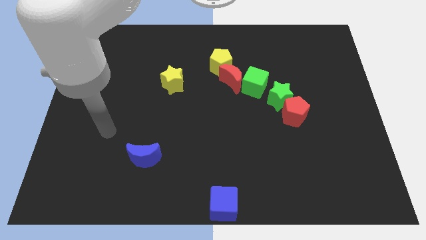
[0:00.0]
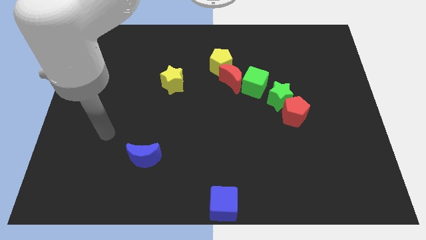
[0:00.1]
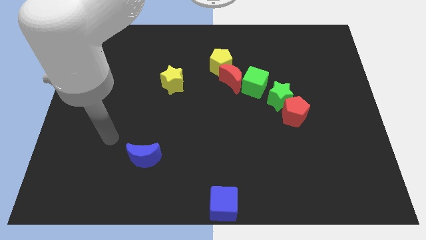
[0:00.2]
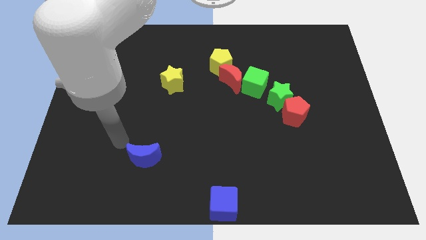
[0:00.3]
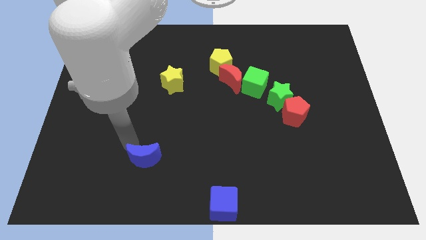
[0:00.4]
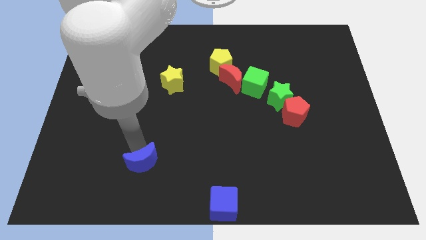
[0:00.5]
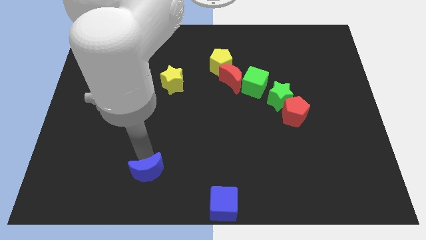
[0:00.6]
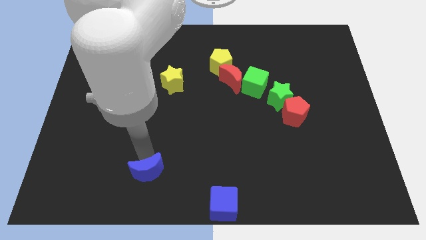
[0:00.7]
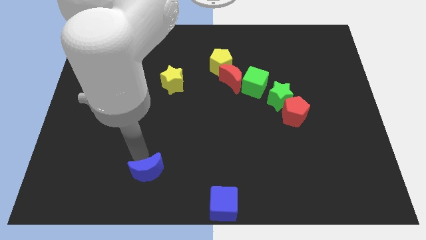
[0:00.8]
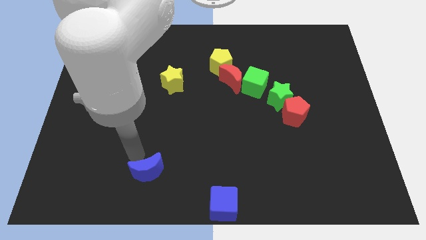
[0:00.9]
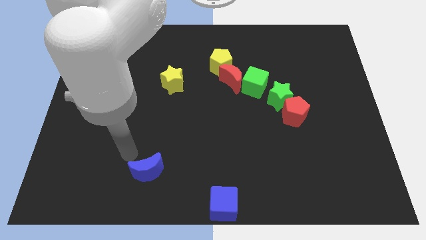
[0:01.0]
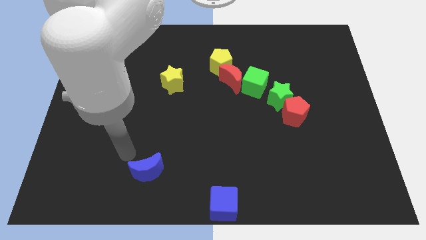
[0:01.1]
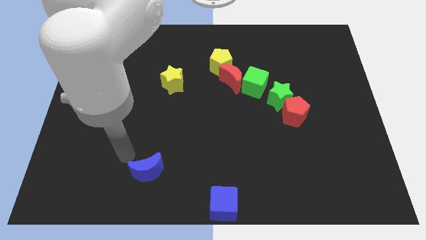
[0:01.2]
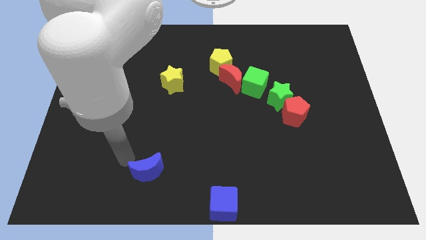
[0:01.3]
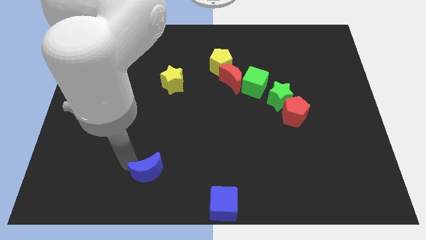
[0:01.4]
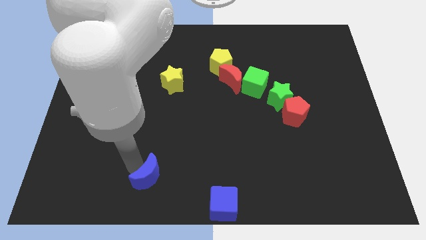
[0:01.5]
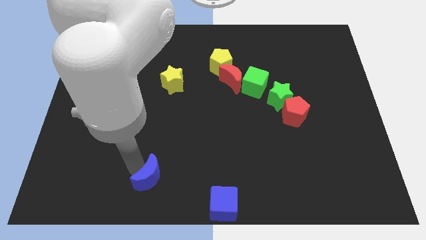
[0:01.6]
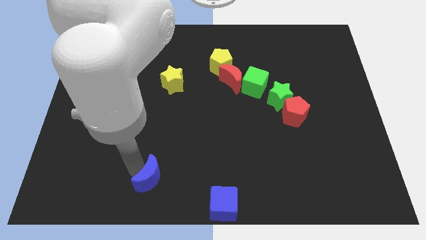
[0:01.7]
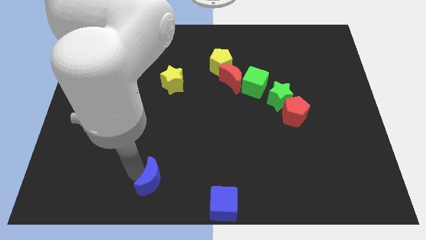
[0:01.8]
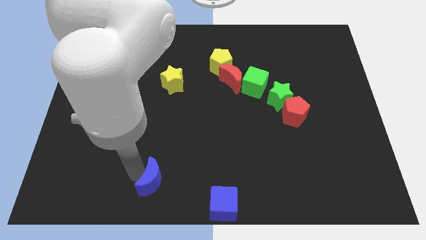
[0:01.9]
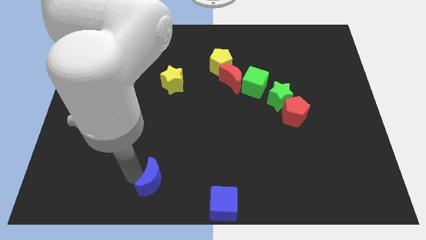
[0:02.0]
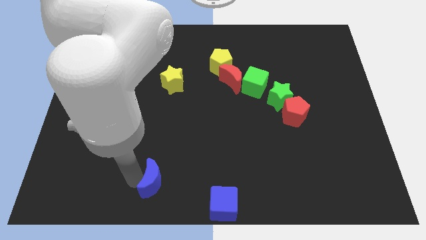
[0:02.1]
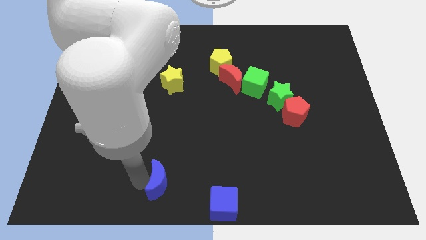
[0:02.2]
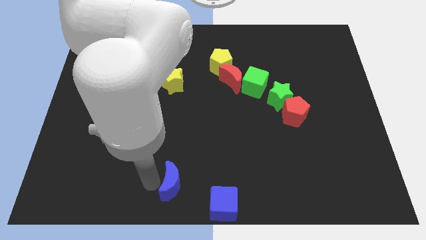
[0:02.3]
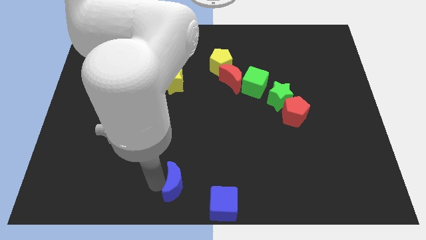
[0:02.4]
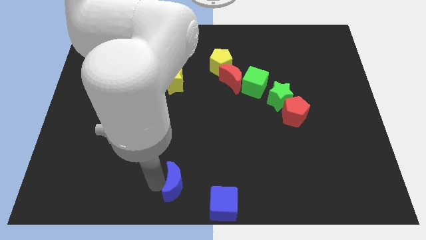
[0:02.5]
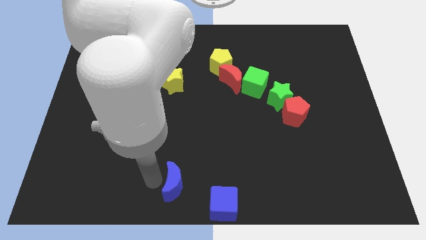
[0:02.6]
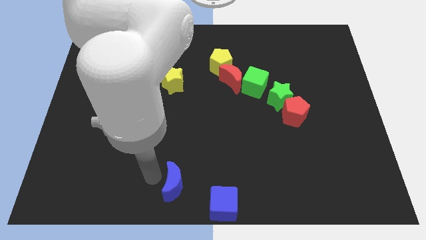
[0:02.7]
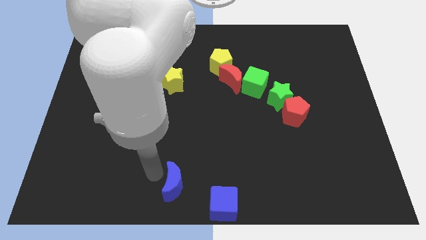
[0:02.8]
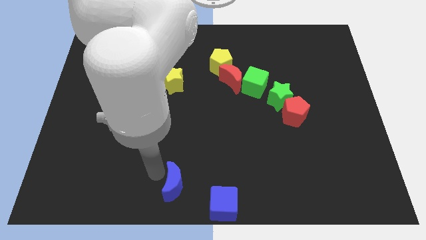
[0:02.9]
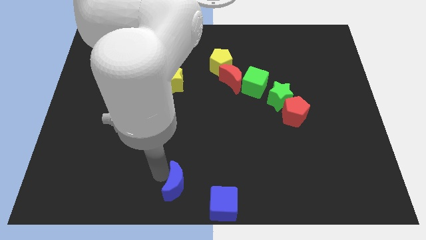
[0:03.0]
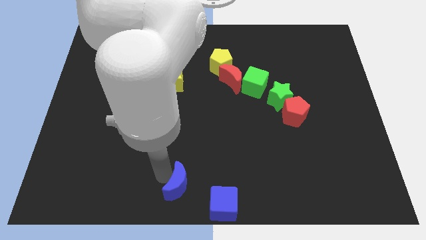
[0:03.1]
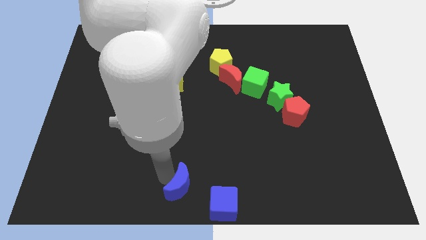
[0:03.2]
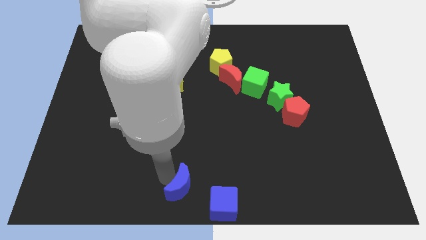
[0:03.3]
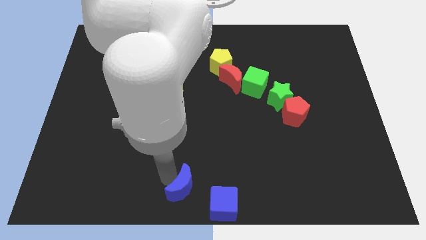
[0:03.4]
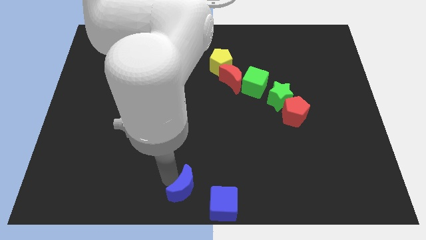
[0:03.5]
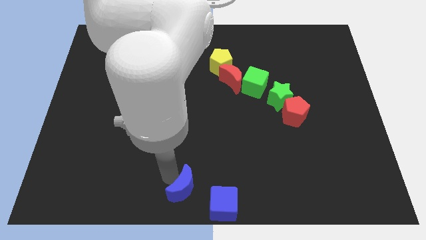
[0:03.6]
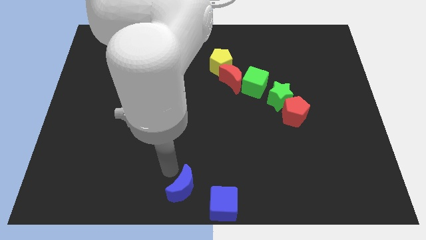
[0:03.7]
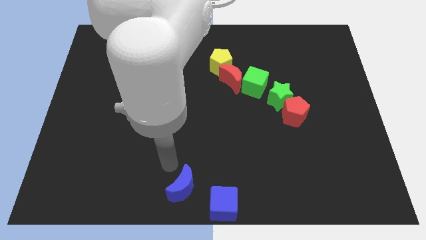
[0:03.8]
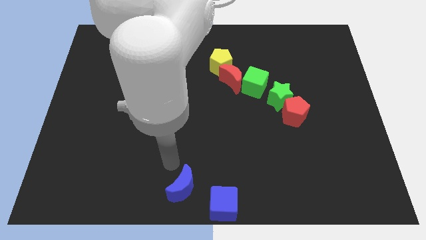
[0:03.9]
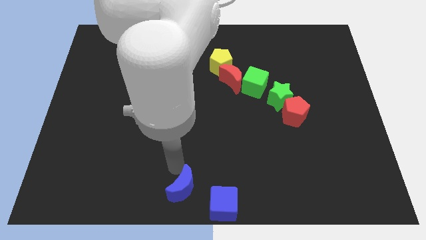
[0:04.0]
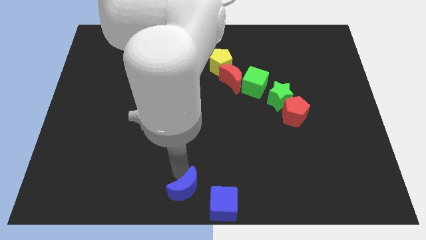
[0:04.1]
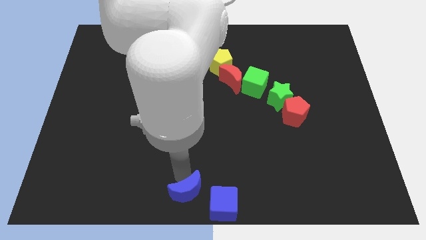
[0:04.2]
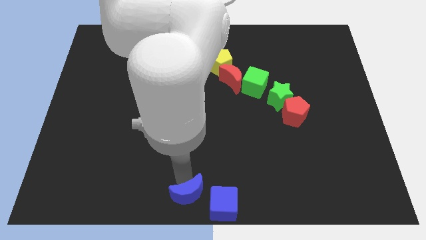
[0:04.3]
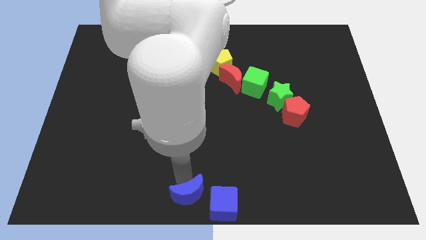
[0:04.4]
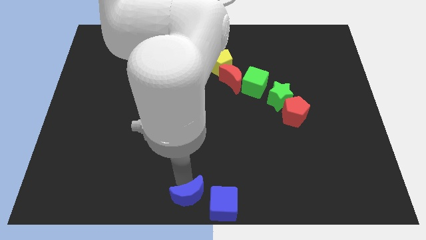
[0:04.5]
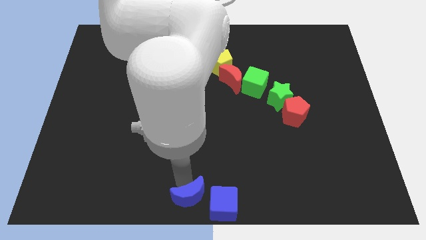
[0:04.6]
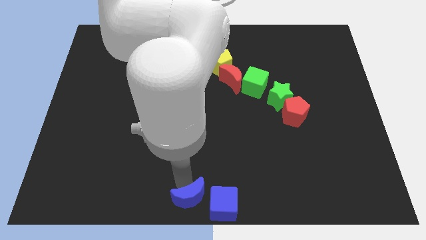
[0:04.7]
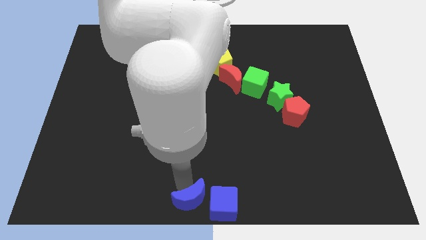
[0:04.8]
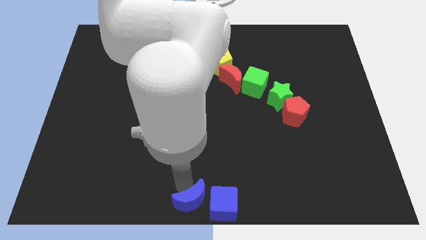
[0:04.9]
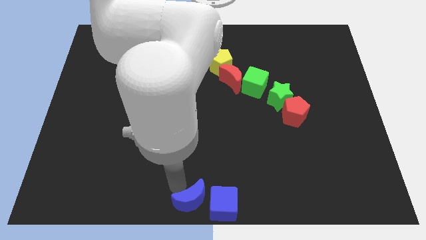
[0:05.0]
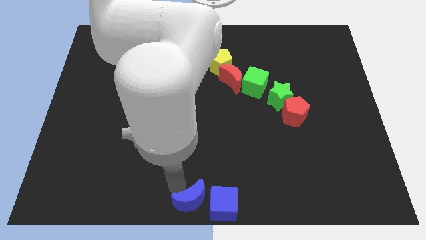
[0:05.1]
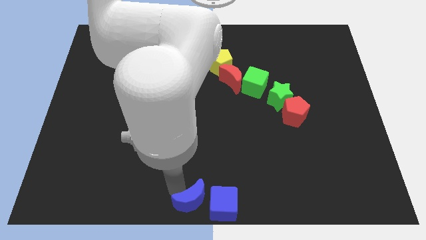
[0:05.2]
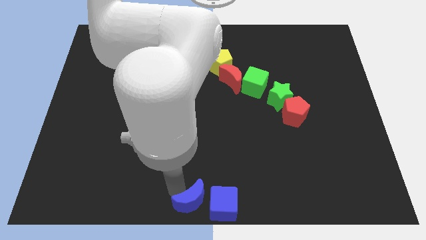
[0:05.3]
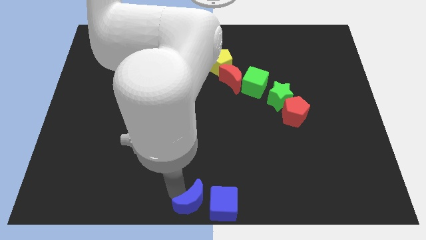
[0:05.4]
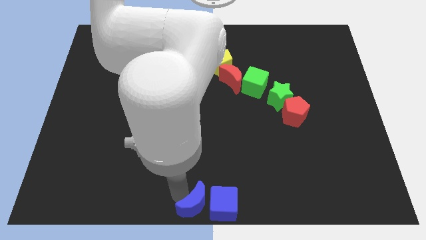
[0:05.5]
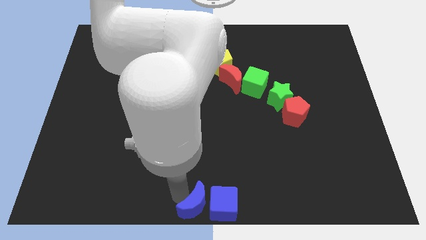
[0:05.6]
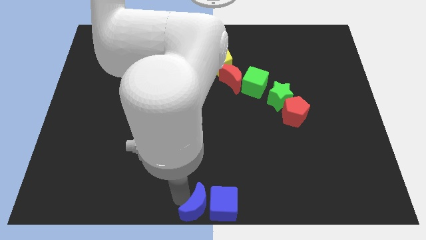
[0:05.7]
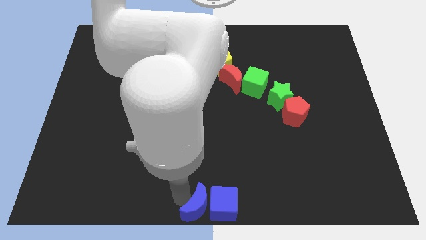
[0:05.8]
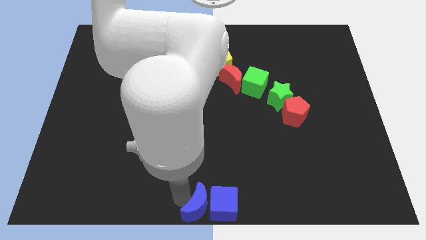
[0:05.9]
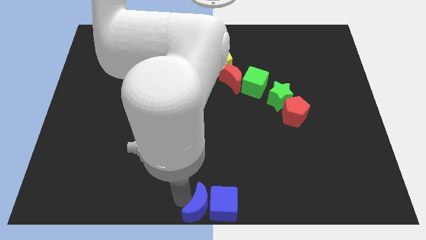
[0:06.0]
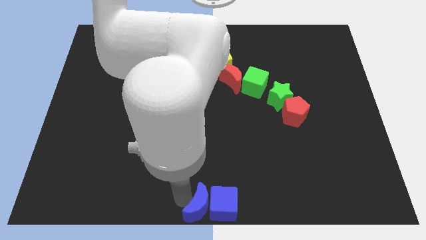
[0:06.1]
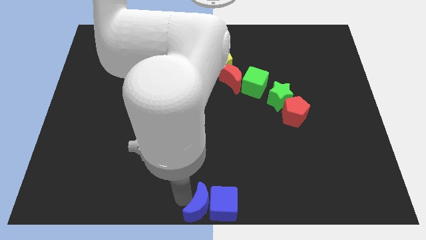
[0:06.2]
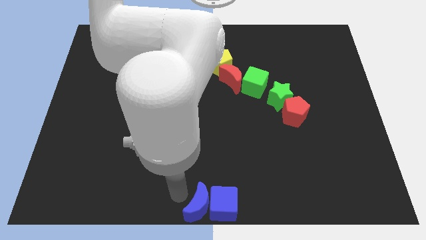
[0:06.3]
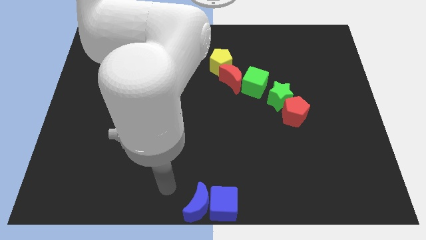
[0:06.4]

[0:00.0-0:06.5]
push the blue moon to the left side of the blue cube

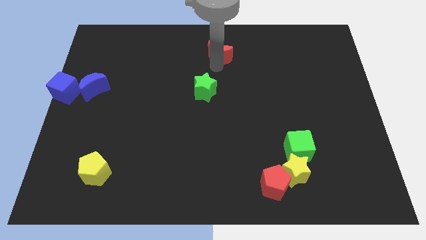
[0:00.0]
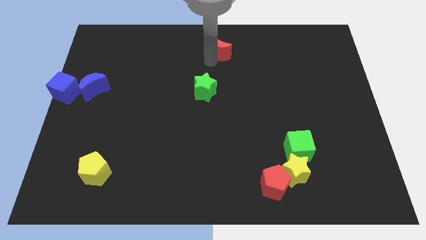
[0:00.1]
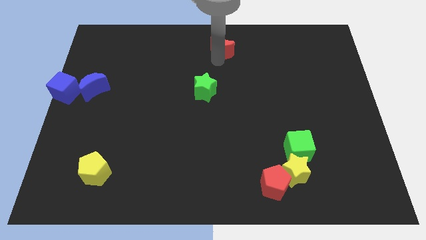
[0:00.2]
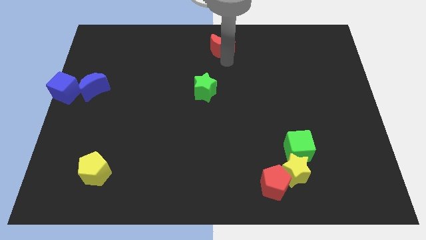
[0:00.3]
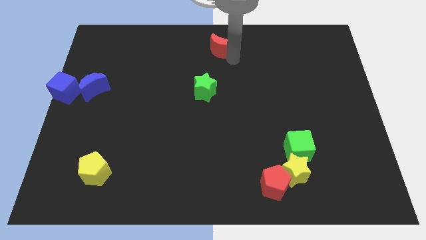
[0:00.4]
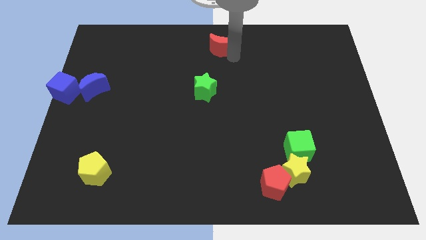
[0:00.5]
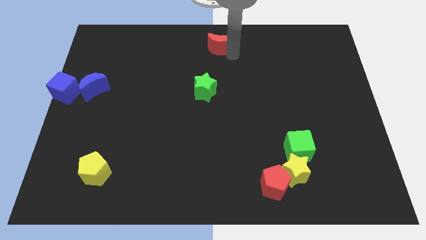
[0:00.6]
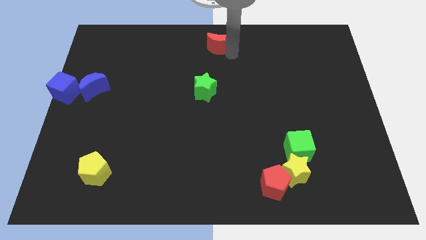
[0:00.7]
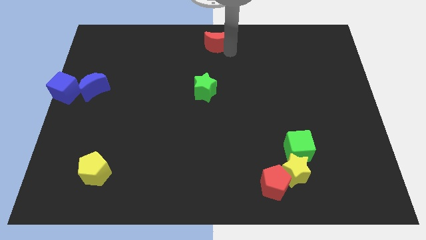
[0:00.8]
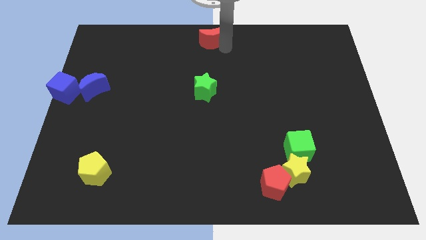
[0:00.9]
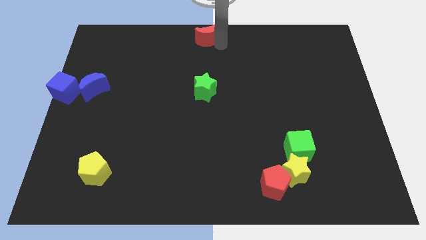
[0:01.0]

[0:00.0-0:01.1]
push red moon on center top

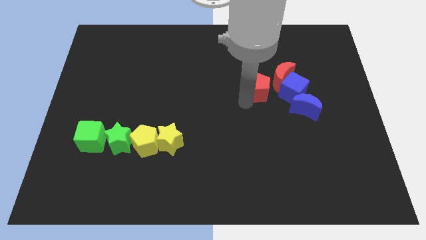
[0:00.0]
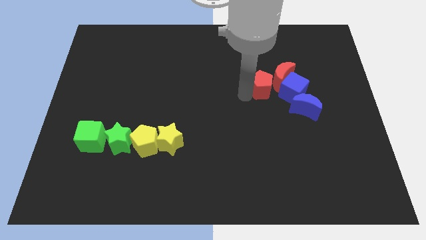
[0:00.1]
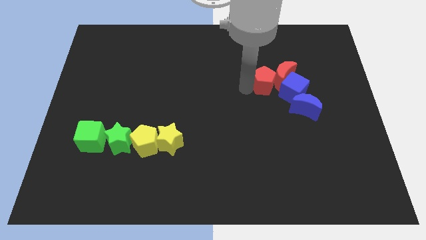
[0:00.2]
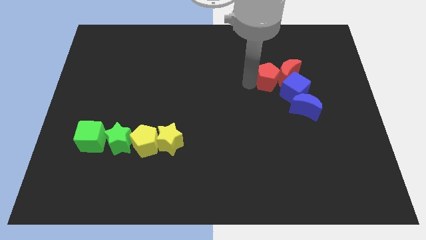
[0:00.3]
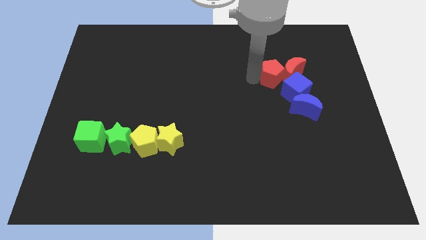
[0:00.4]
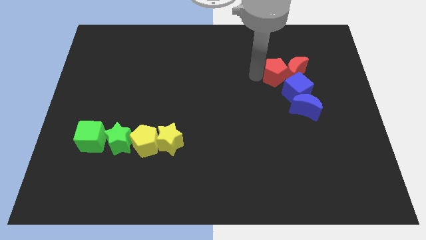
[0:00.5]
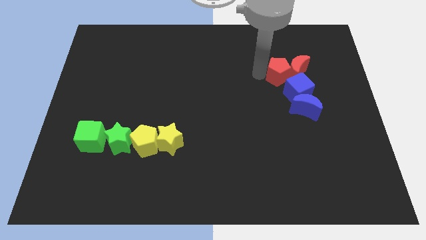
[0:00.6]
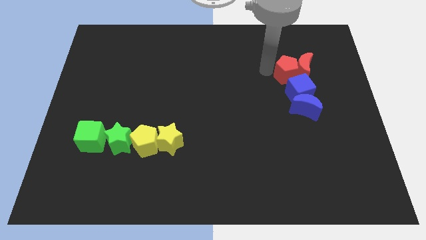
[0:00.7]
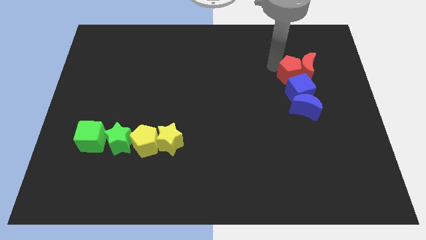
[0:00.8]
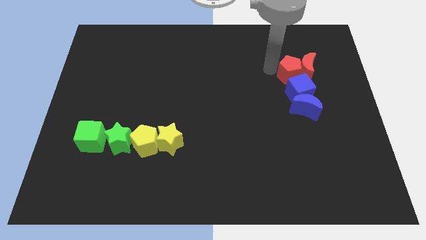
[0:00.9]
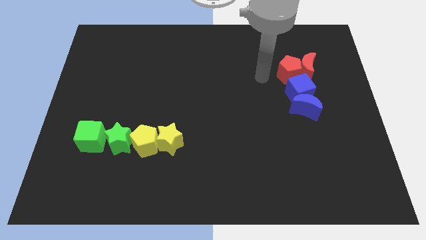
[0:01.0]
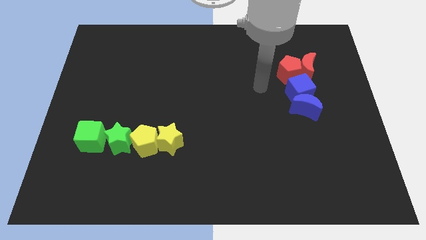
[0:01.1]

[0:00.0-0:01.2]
place the red pentagon above the blue cube

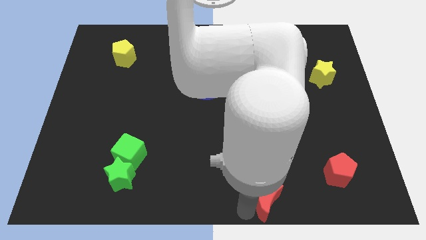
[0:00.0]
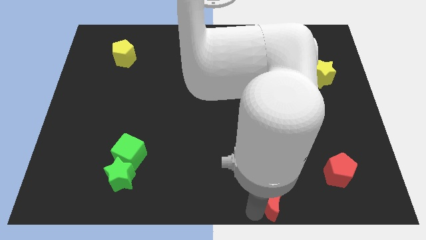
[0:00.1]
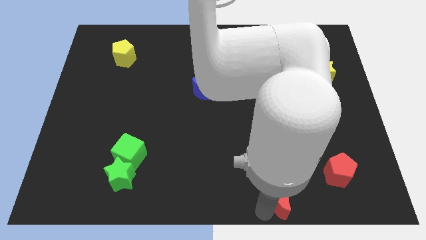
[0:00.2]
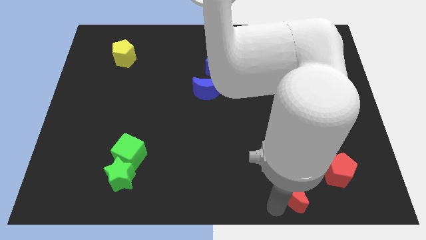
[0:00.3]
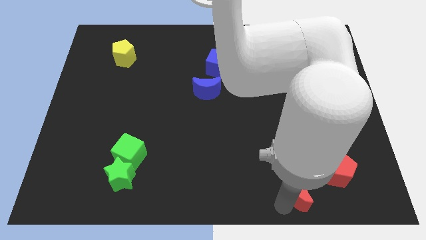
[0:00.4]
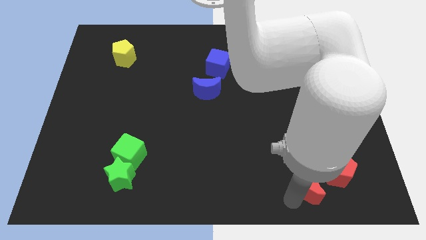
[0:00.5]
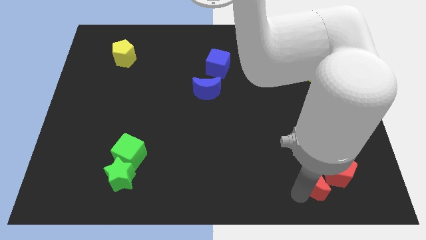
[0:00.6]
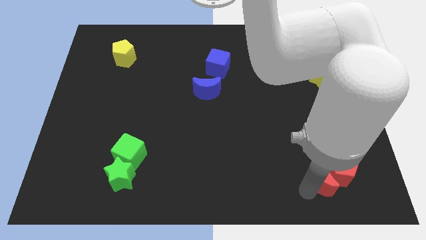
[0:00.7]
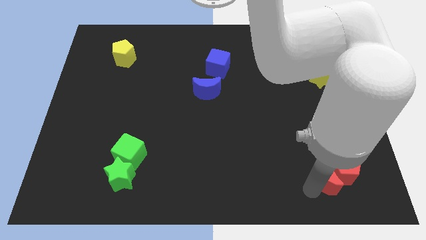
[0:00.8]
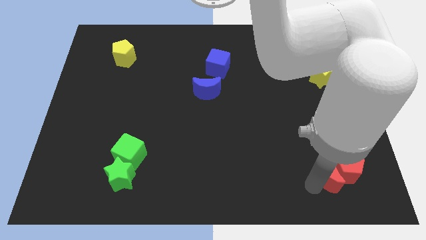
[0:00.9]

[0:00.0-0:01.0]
place the red moon beside the red pentagon
